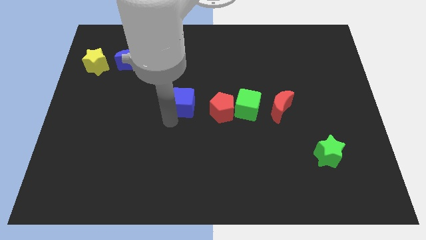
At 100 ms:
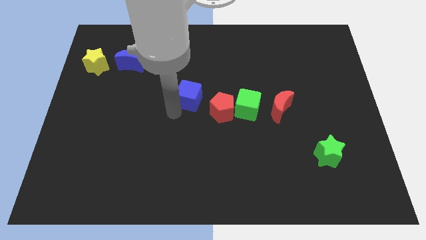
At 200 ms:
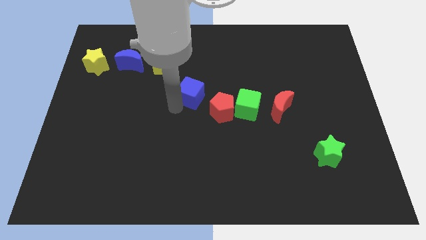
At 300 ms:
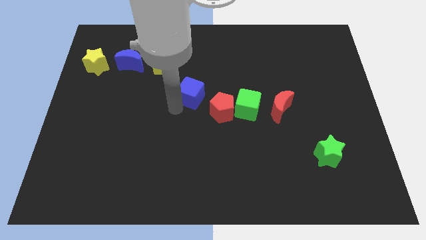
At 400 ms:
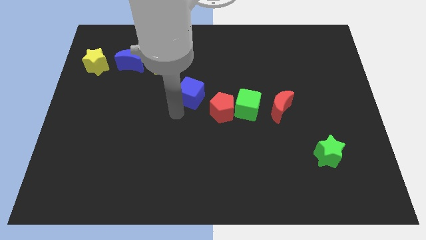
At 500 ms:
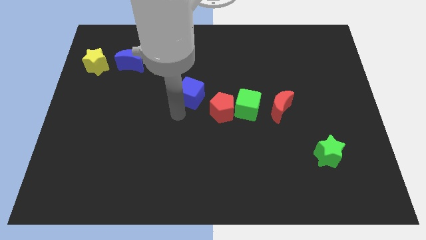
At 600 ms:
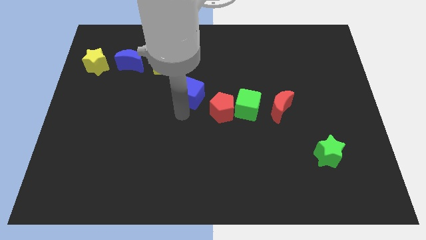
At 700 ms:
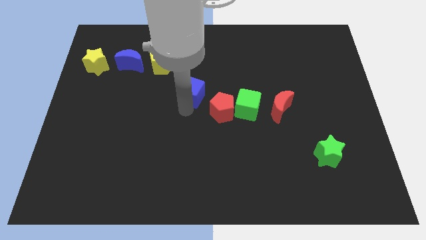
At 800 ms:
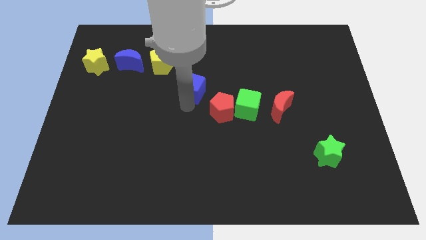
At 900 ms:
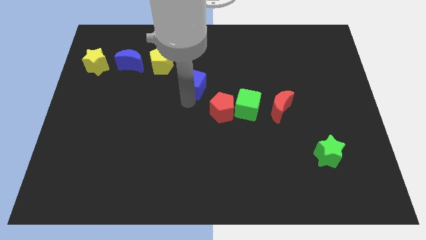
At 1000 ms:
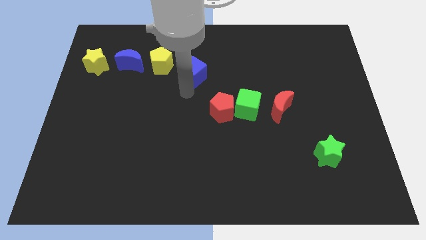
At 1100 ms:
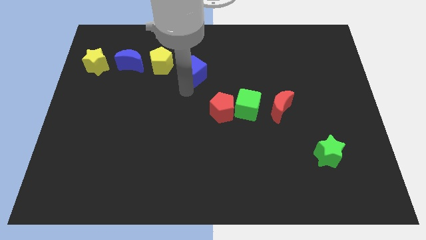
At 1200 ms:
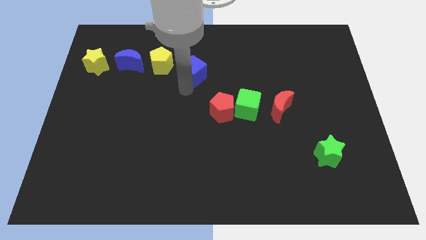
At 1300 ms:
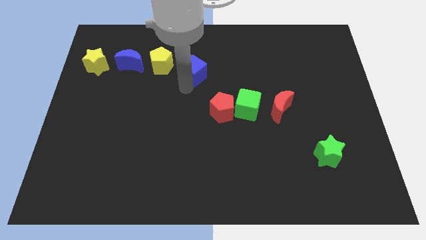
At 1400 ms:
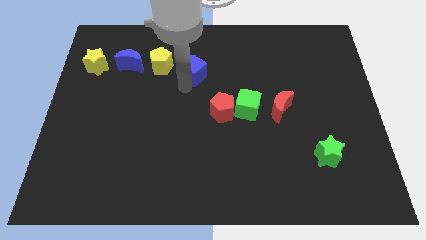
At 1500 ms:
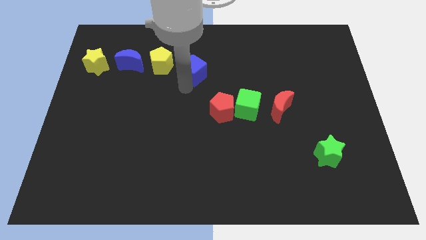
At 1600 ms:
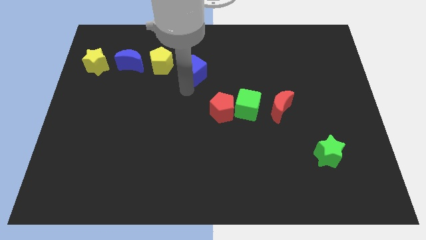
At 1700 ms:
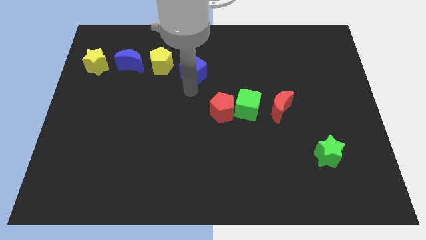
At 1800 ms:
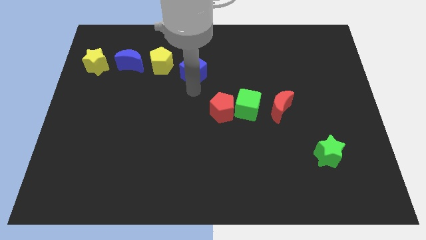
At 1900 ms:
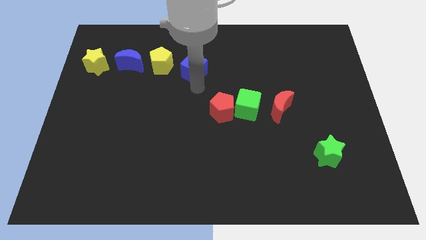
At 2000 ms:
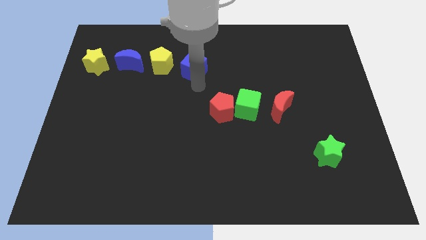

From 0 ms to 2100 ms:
place the blue cube to the right side of the yellow pentagon

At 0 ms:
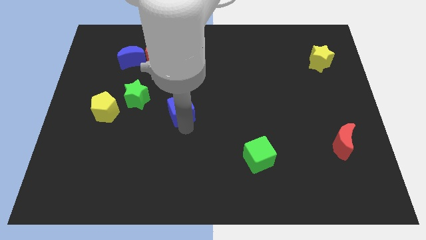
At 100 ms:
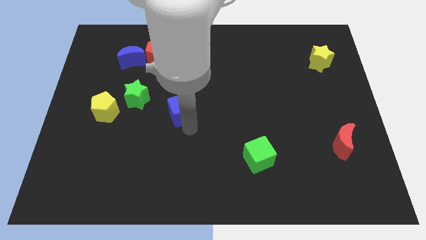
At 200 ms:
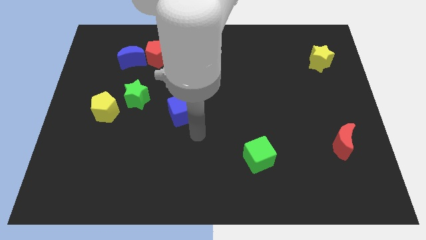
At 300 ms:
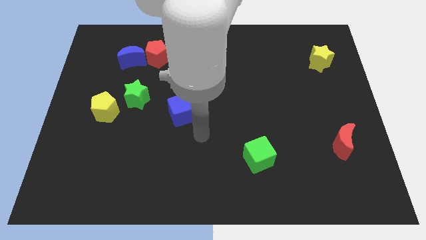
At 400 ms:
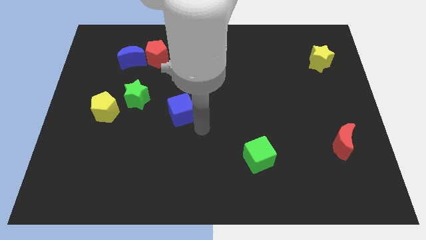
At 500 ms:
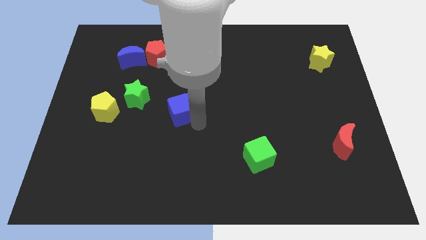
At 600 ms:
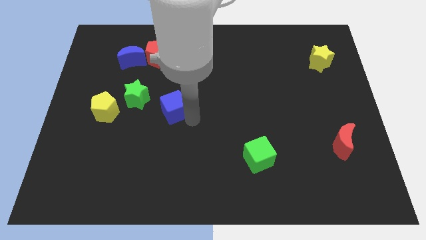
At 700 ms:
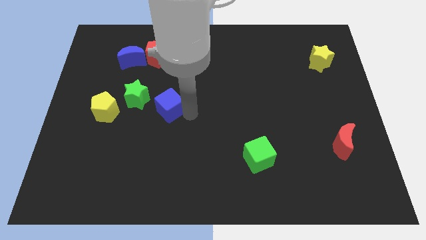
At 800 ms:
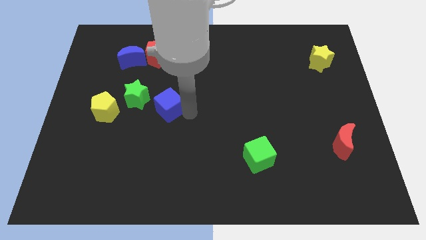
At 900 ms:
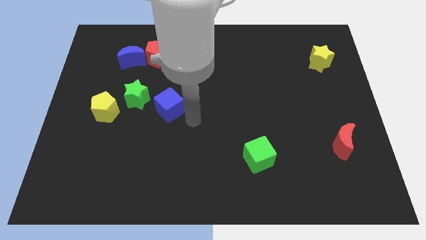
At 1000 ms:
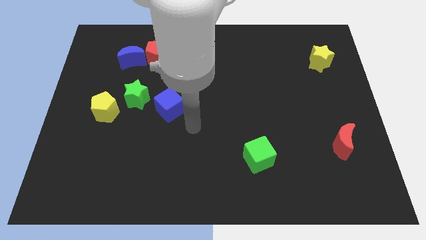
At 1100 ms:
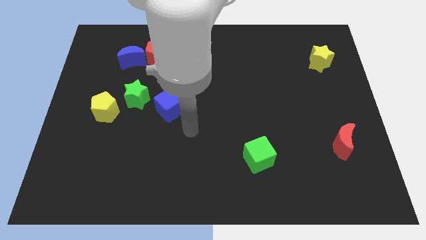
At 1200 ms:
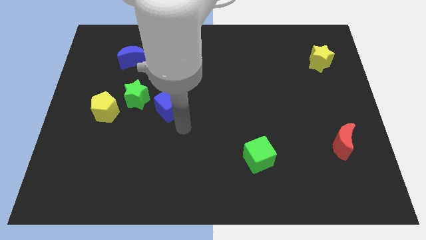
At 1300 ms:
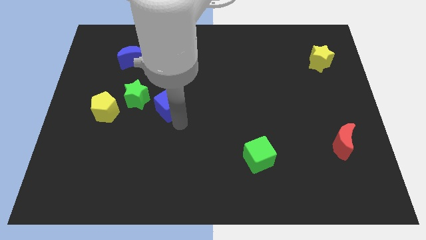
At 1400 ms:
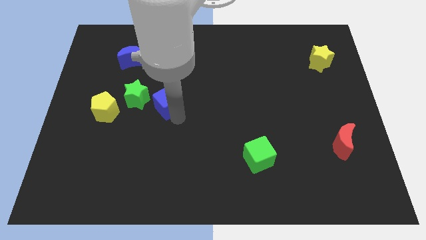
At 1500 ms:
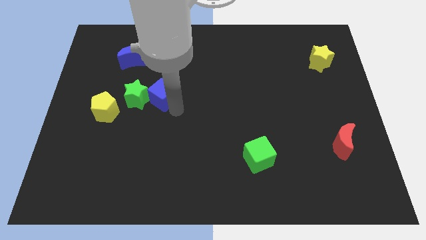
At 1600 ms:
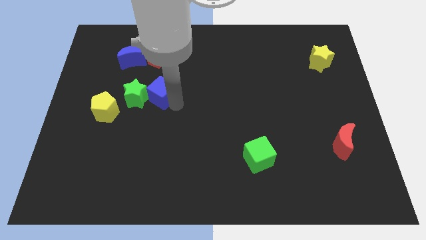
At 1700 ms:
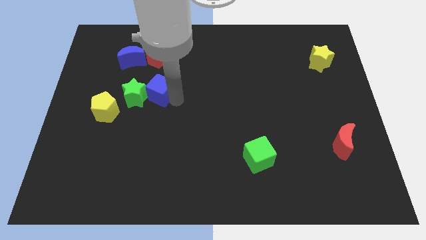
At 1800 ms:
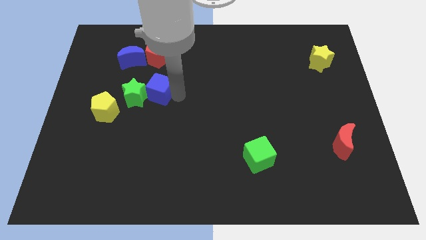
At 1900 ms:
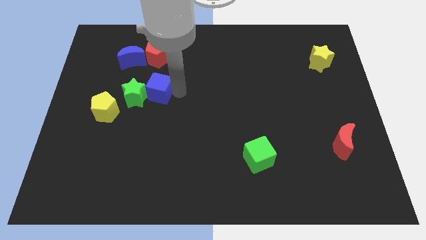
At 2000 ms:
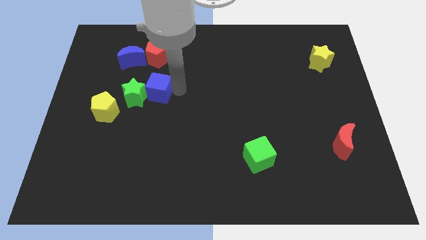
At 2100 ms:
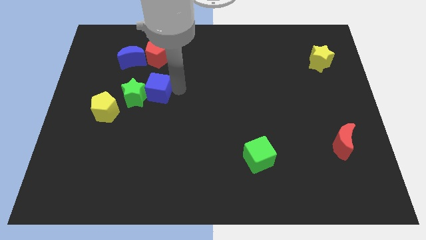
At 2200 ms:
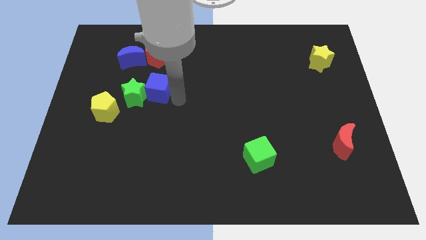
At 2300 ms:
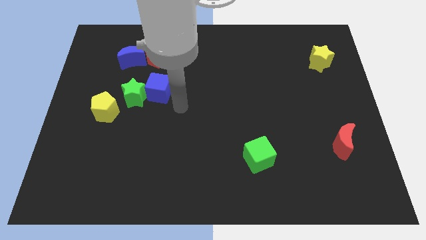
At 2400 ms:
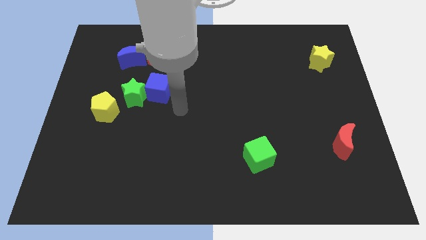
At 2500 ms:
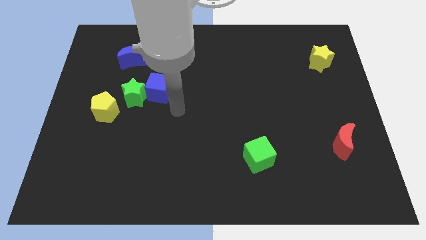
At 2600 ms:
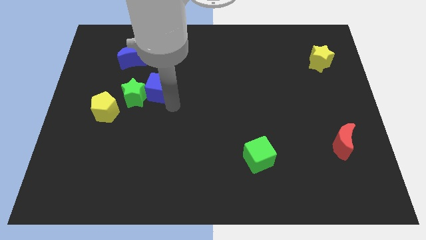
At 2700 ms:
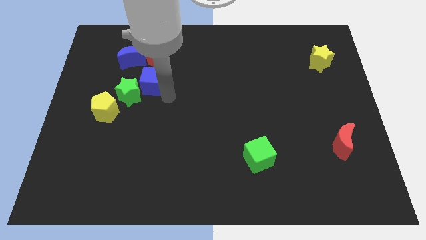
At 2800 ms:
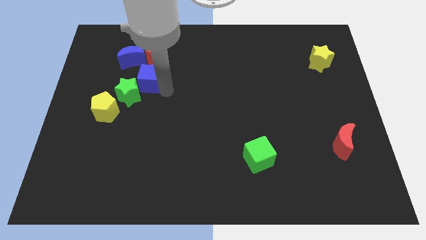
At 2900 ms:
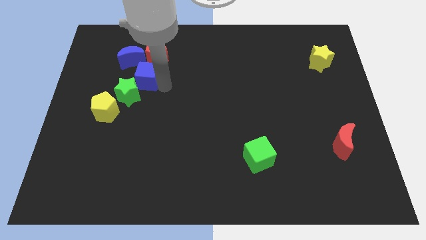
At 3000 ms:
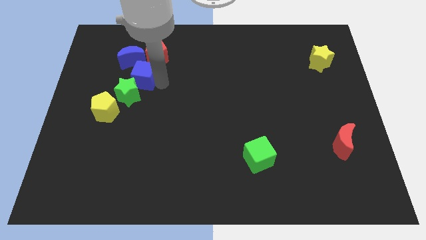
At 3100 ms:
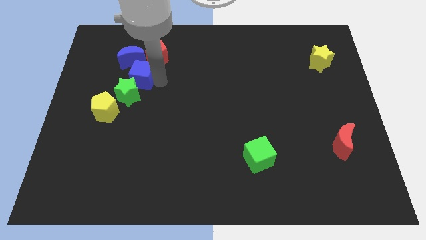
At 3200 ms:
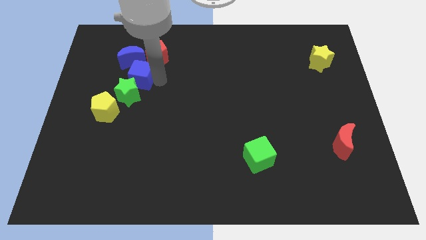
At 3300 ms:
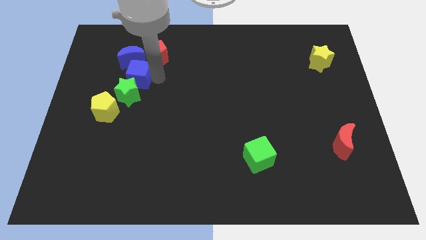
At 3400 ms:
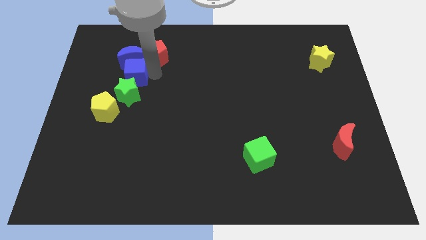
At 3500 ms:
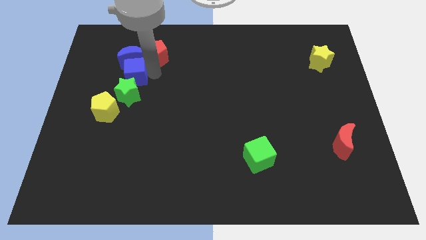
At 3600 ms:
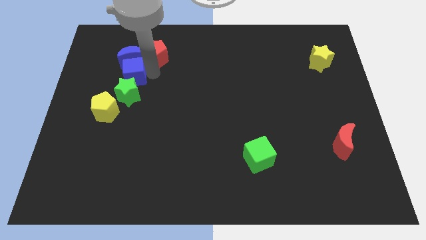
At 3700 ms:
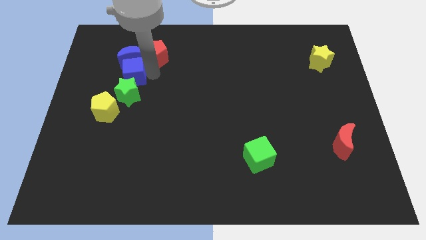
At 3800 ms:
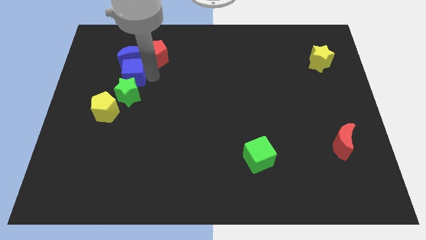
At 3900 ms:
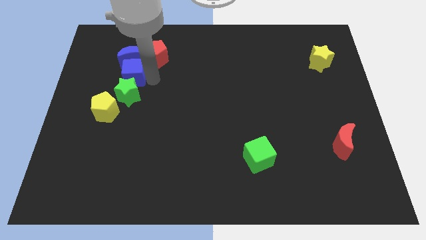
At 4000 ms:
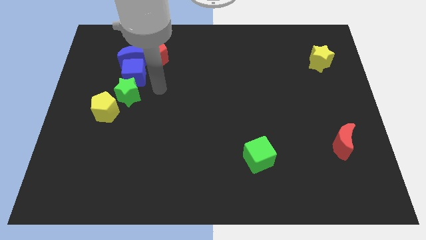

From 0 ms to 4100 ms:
arrange the blue blocks and green star in a vertical line

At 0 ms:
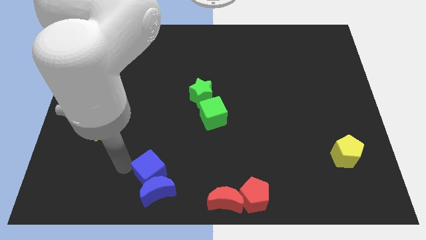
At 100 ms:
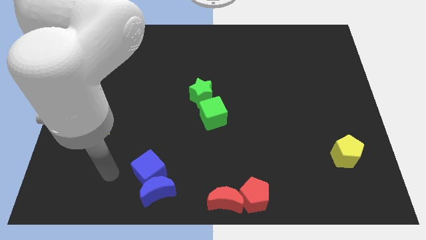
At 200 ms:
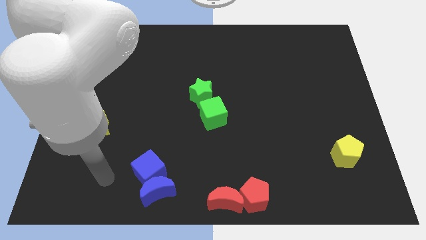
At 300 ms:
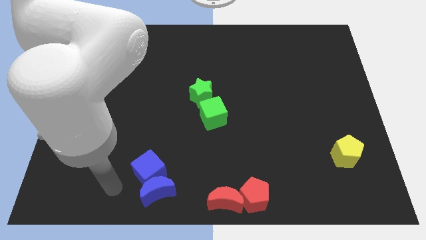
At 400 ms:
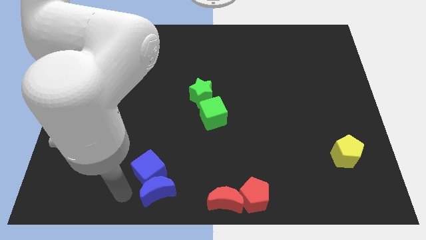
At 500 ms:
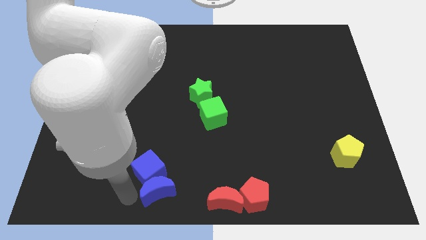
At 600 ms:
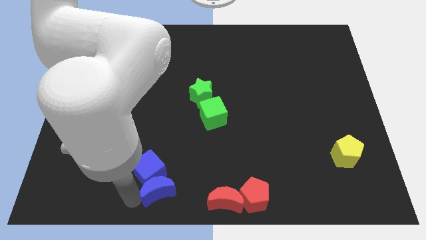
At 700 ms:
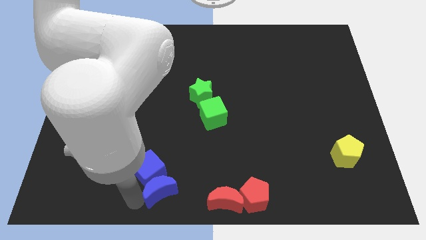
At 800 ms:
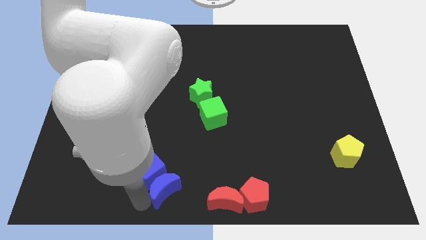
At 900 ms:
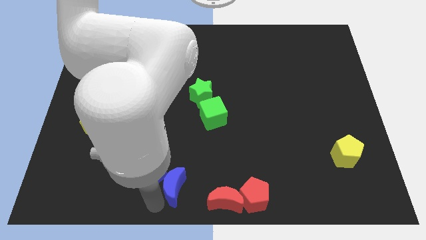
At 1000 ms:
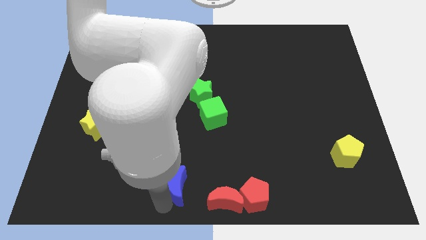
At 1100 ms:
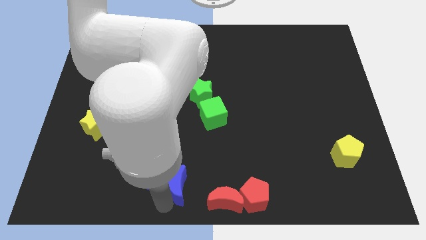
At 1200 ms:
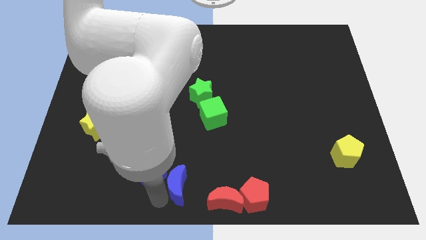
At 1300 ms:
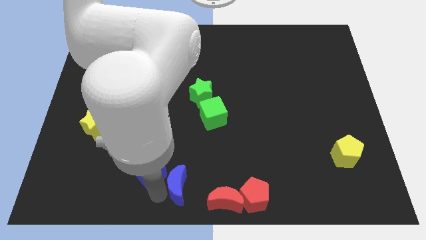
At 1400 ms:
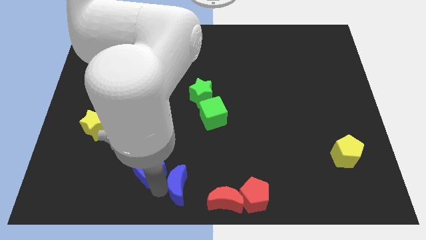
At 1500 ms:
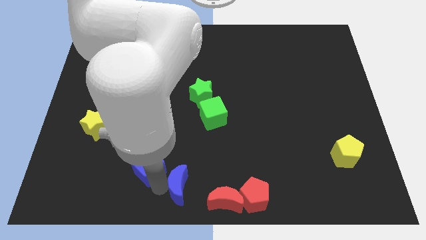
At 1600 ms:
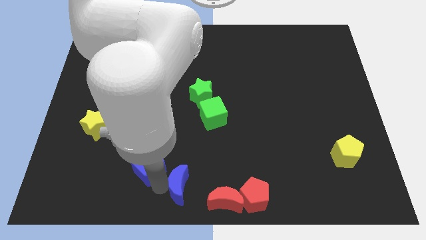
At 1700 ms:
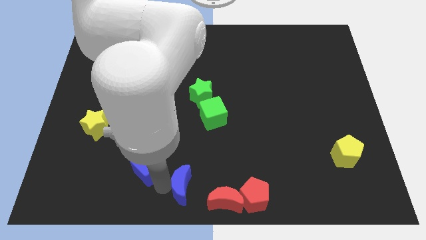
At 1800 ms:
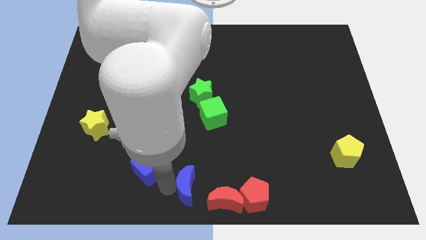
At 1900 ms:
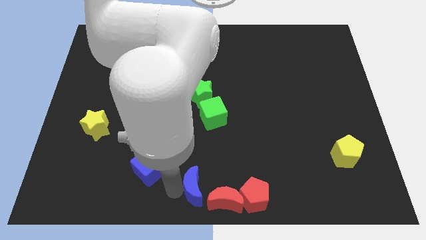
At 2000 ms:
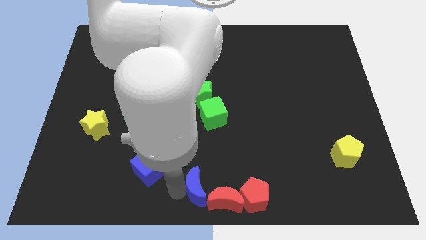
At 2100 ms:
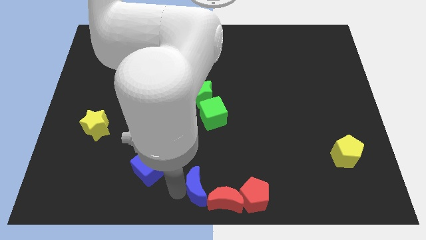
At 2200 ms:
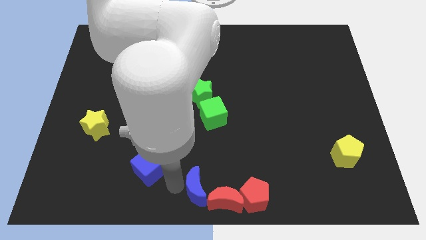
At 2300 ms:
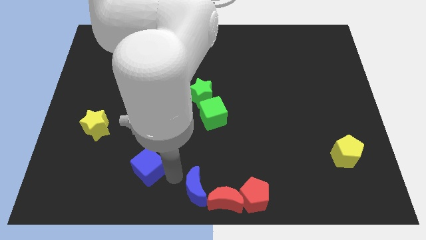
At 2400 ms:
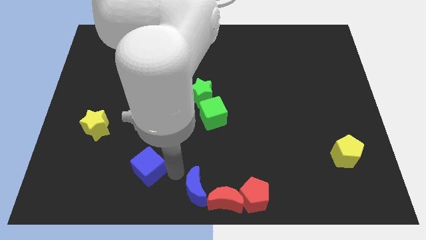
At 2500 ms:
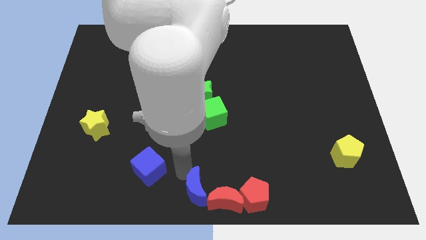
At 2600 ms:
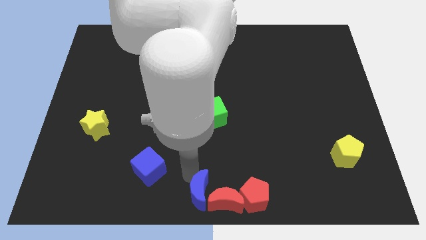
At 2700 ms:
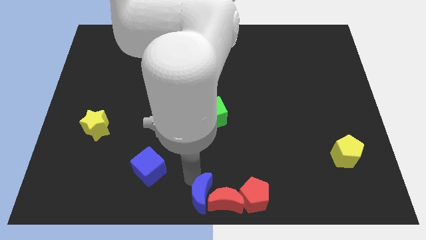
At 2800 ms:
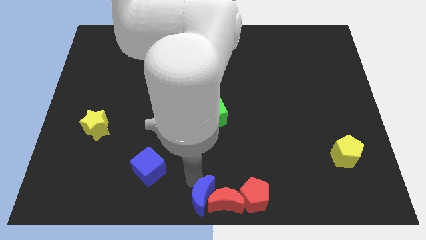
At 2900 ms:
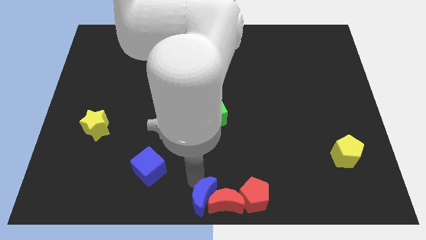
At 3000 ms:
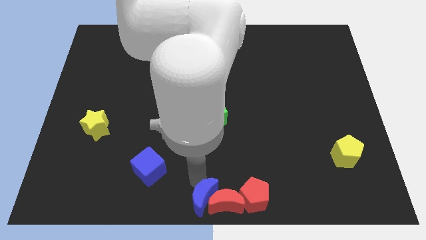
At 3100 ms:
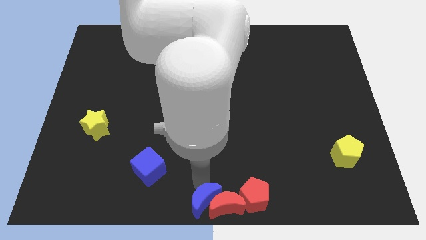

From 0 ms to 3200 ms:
move the blue crescent towards the bottom center of the board
